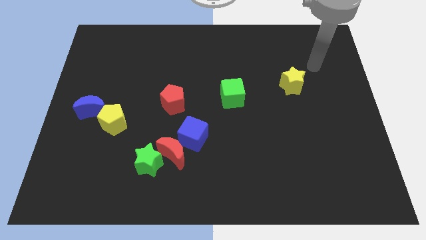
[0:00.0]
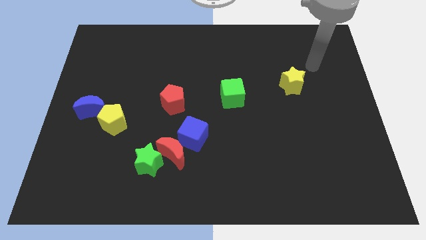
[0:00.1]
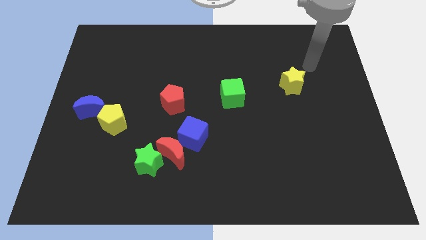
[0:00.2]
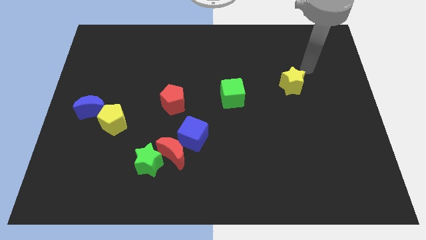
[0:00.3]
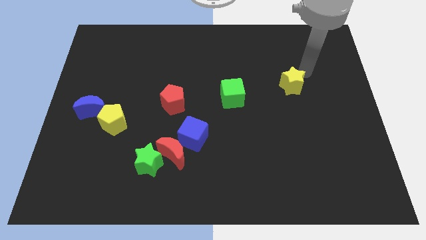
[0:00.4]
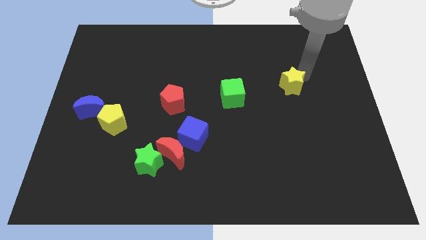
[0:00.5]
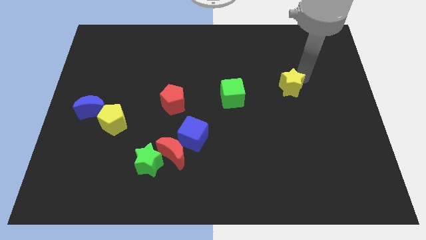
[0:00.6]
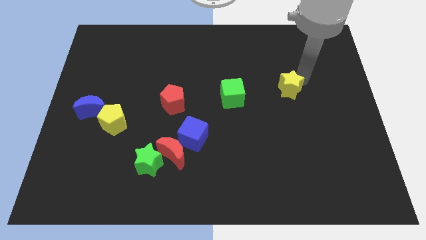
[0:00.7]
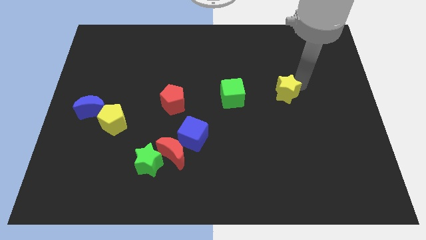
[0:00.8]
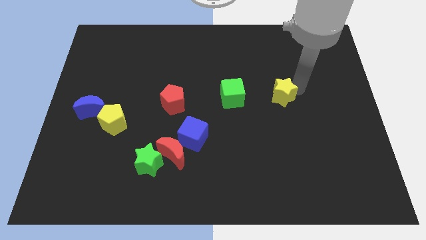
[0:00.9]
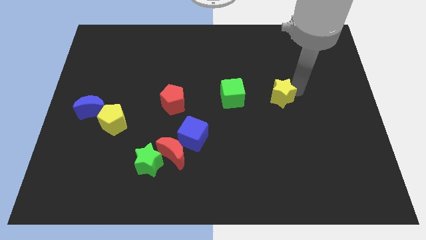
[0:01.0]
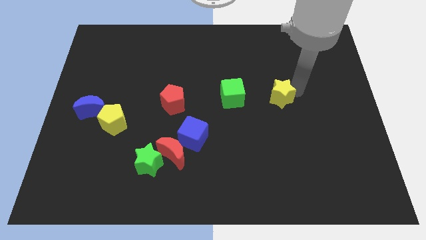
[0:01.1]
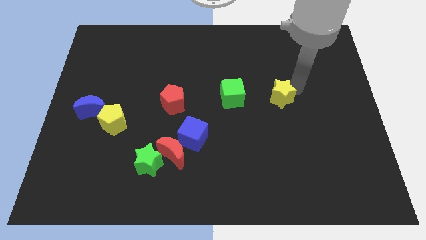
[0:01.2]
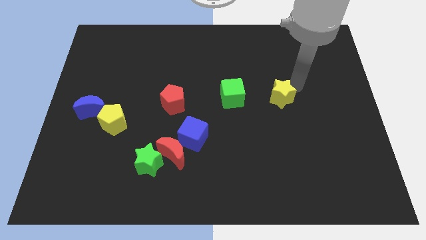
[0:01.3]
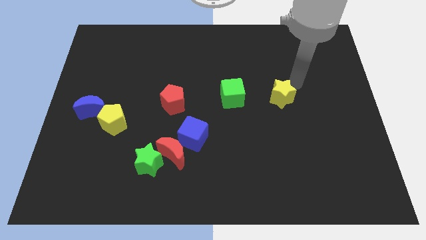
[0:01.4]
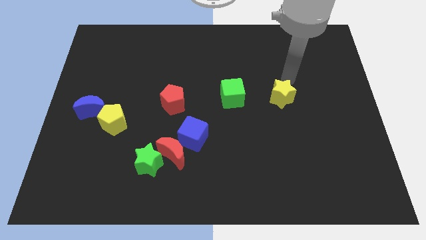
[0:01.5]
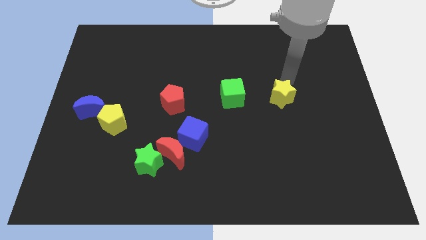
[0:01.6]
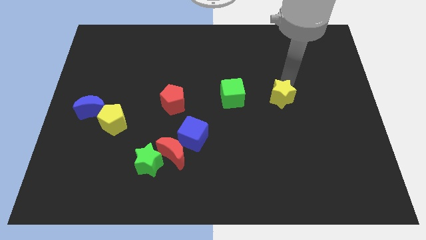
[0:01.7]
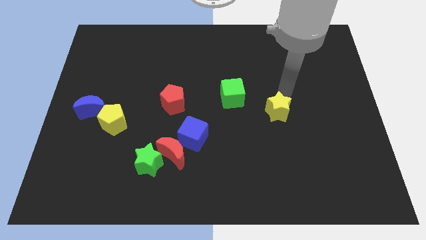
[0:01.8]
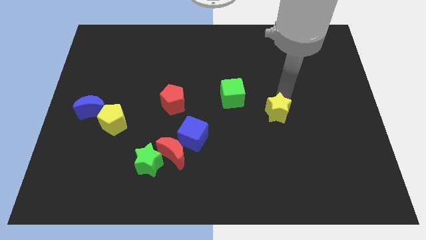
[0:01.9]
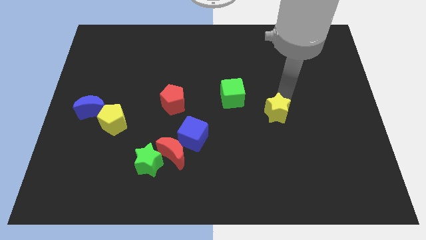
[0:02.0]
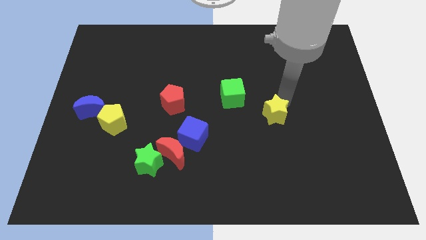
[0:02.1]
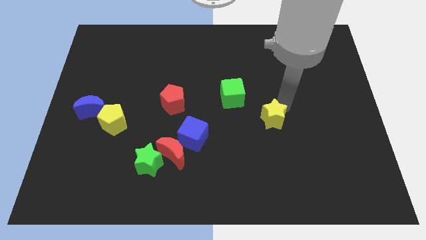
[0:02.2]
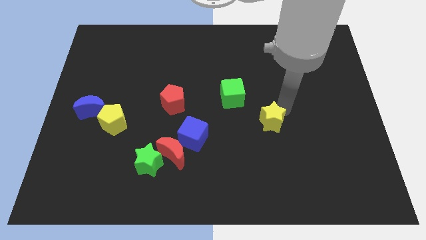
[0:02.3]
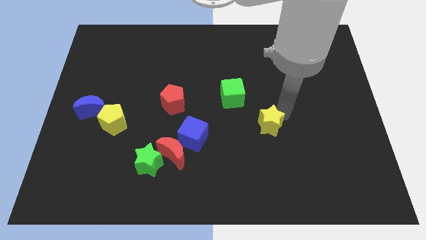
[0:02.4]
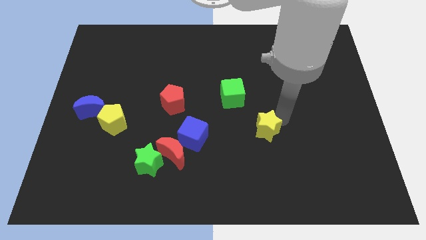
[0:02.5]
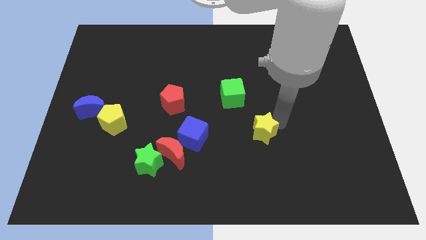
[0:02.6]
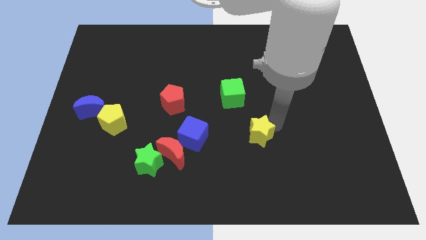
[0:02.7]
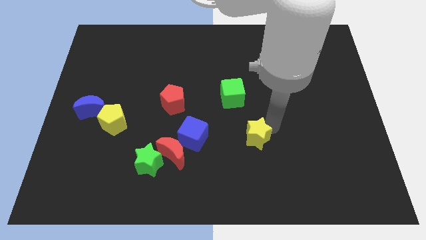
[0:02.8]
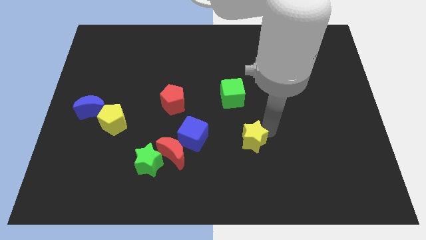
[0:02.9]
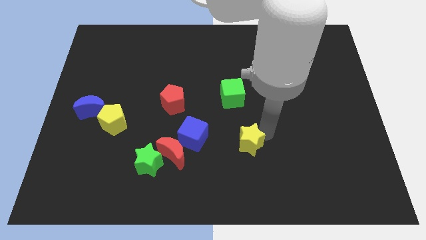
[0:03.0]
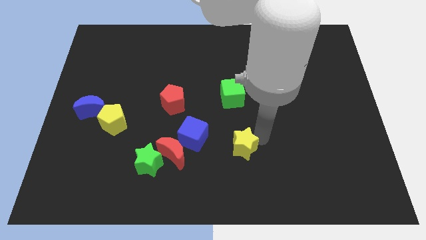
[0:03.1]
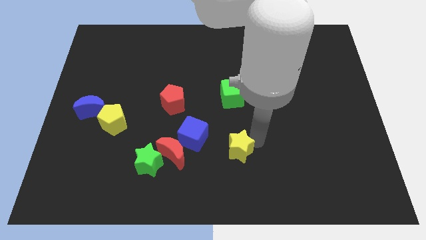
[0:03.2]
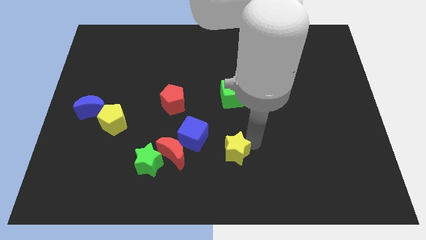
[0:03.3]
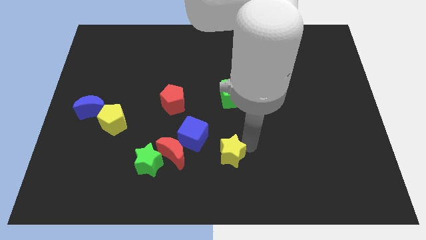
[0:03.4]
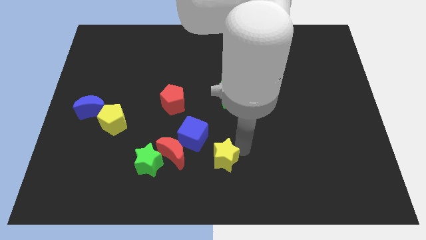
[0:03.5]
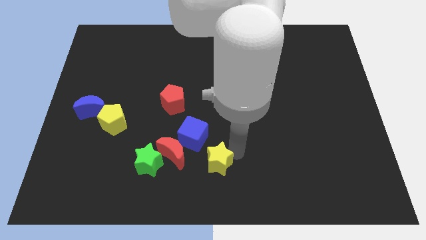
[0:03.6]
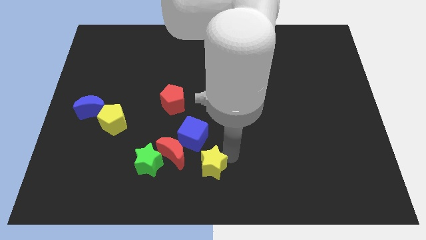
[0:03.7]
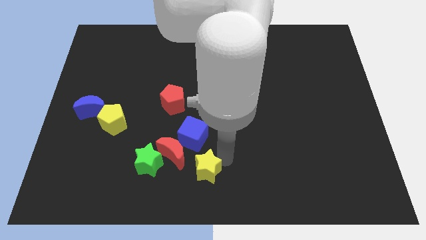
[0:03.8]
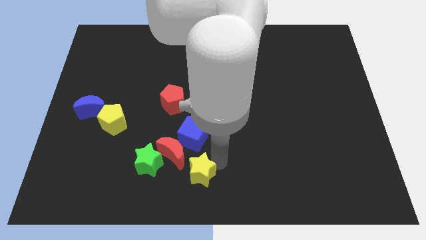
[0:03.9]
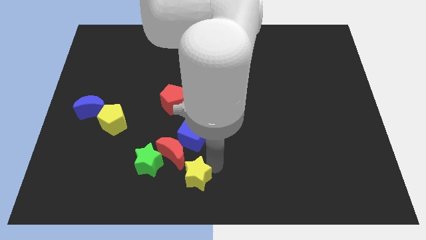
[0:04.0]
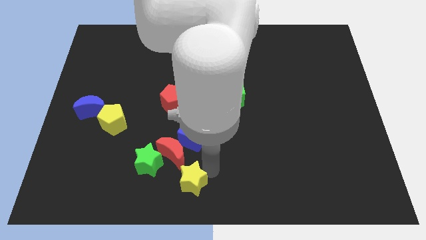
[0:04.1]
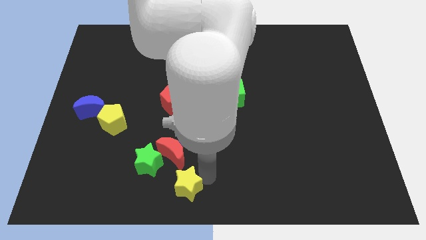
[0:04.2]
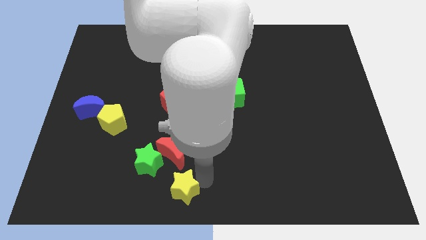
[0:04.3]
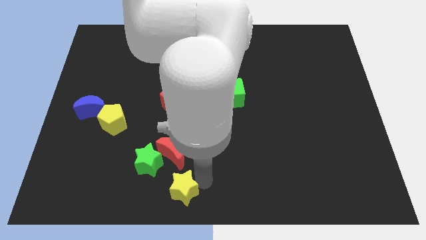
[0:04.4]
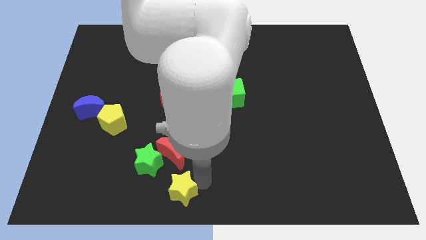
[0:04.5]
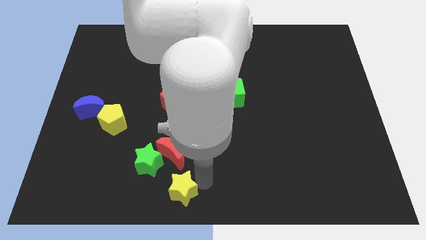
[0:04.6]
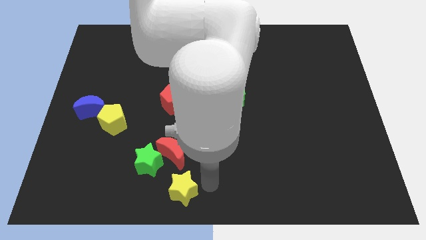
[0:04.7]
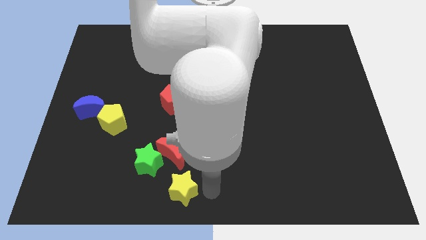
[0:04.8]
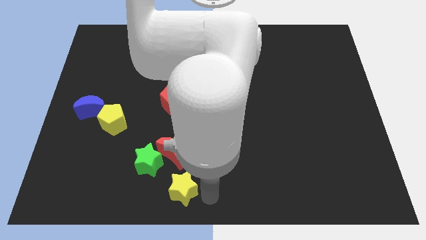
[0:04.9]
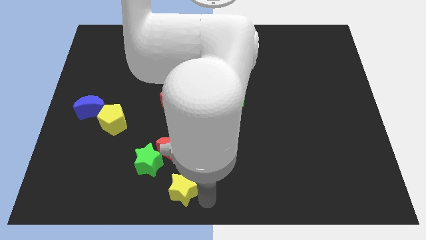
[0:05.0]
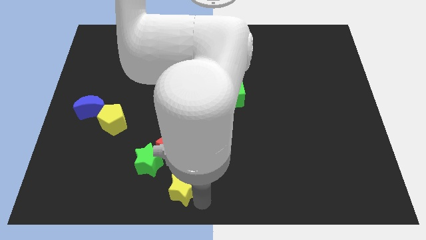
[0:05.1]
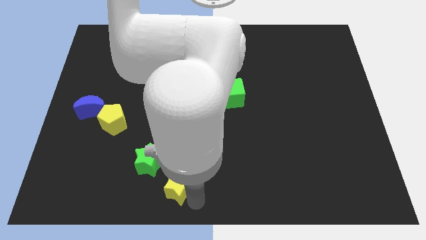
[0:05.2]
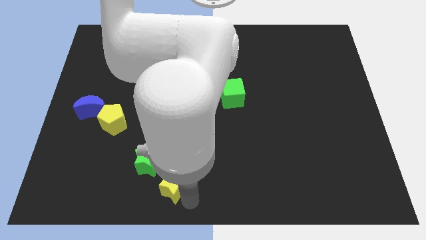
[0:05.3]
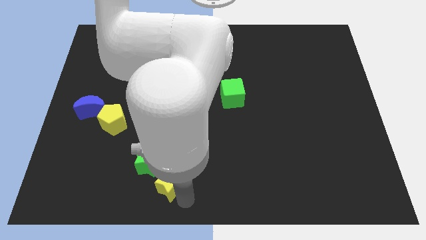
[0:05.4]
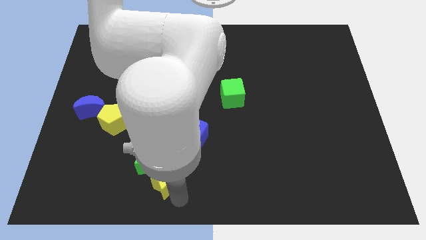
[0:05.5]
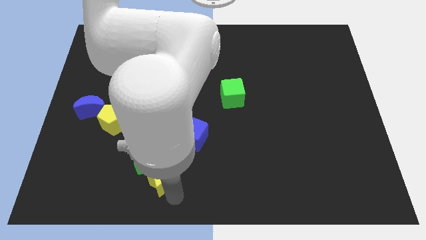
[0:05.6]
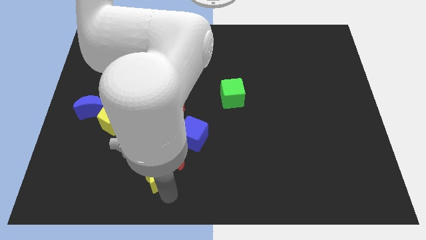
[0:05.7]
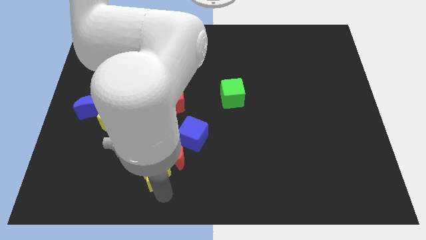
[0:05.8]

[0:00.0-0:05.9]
push the yellow star close to the green star

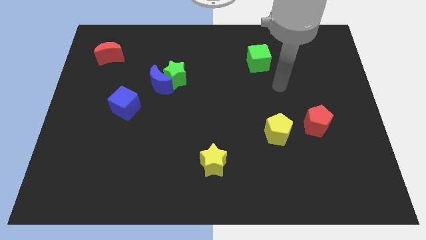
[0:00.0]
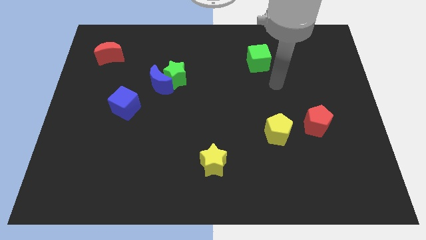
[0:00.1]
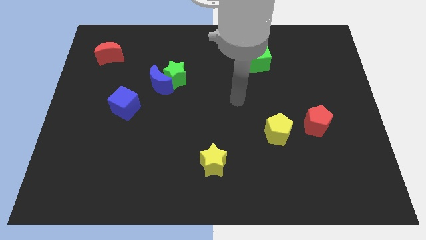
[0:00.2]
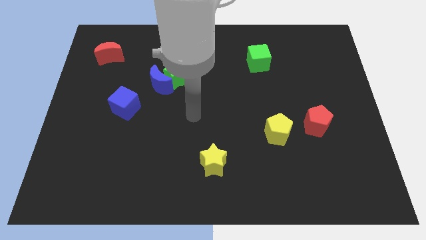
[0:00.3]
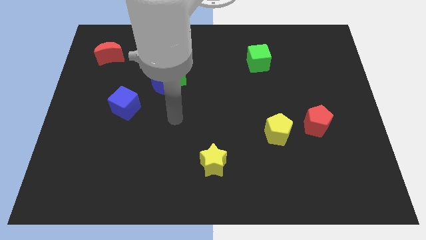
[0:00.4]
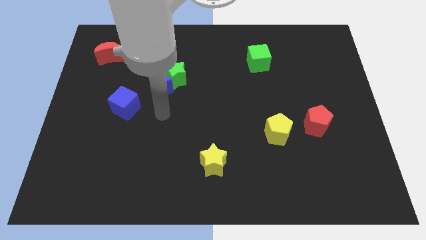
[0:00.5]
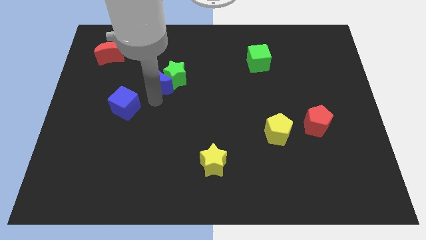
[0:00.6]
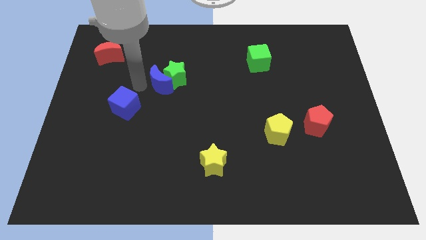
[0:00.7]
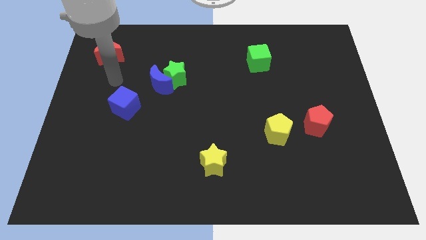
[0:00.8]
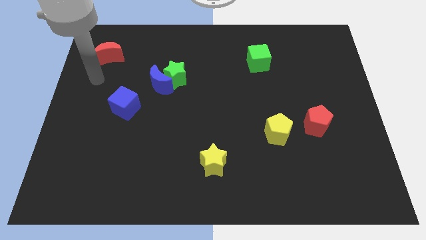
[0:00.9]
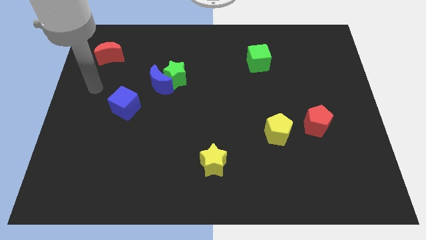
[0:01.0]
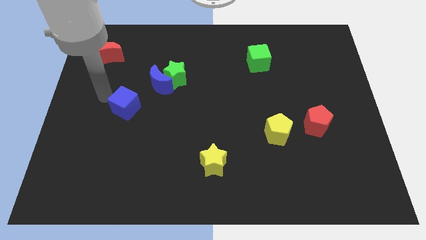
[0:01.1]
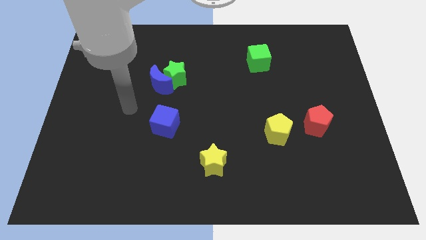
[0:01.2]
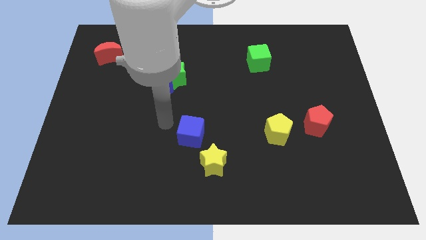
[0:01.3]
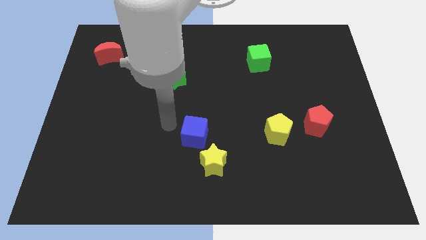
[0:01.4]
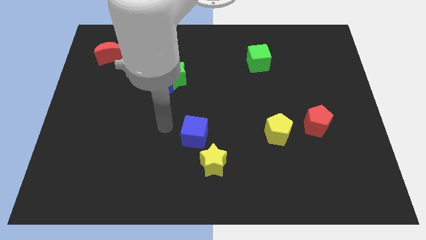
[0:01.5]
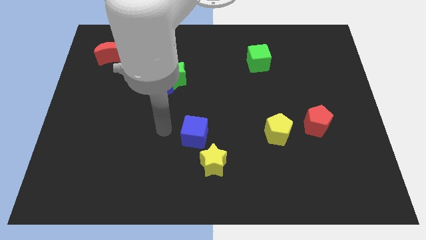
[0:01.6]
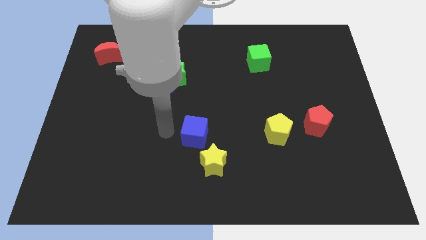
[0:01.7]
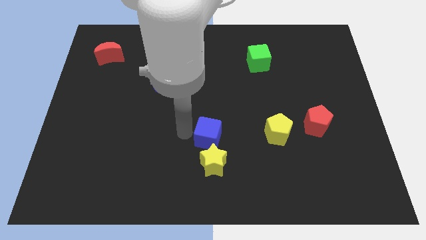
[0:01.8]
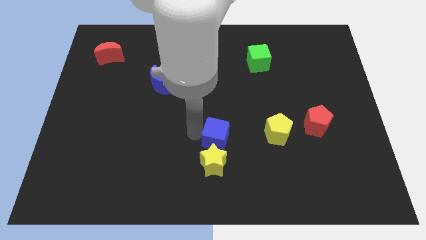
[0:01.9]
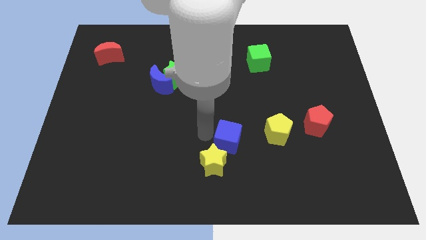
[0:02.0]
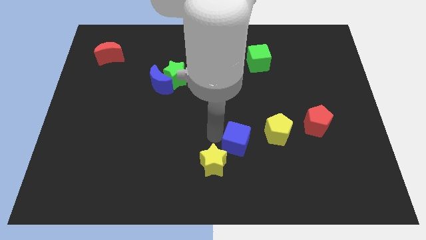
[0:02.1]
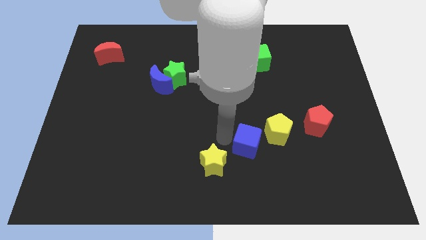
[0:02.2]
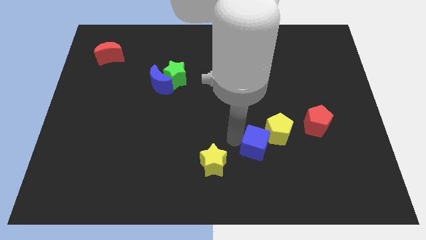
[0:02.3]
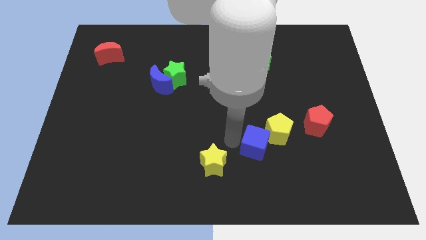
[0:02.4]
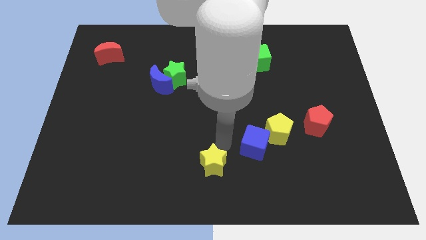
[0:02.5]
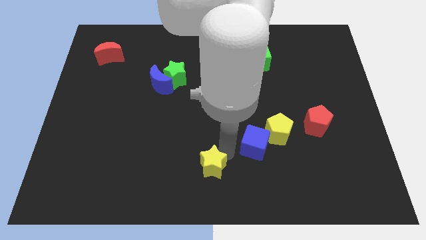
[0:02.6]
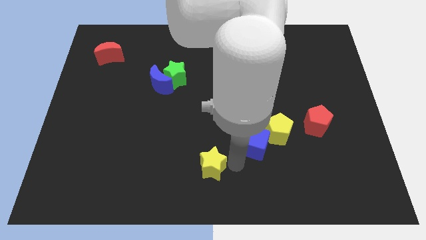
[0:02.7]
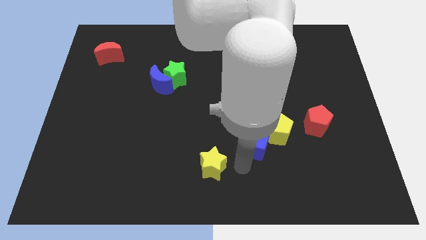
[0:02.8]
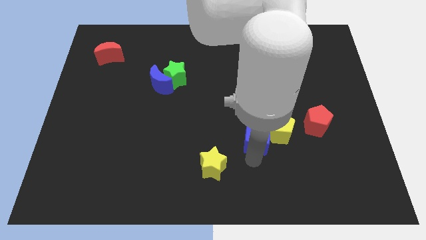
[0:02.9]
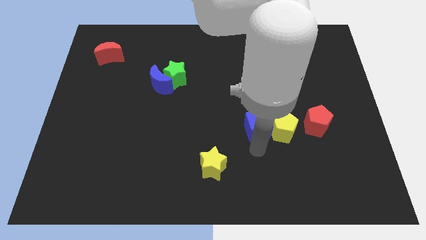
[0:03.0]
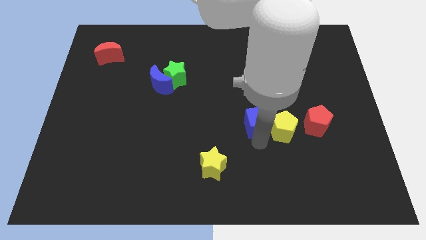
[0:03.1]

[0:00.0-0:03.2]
put the blue cube to the yellow pentagon
